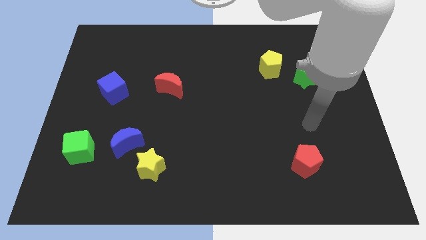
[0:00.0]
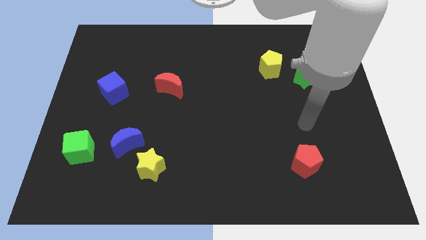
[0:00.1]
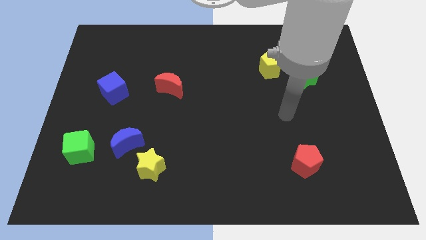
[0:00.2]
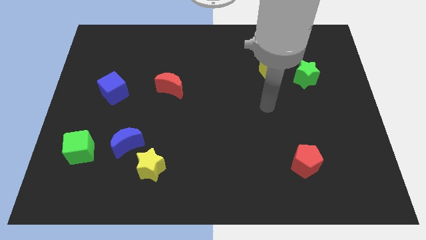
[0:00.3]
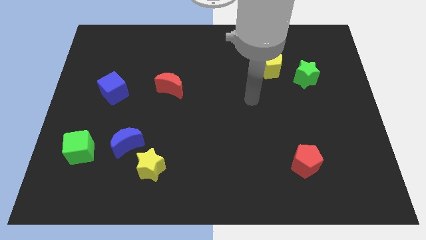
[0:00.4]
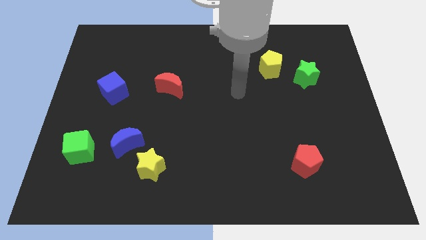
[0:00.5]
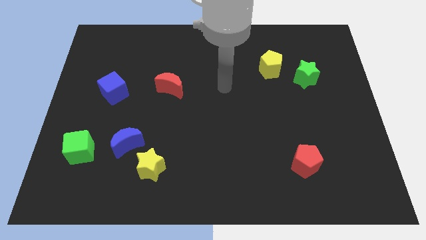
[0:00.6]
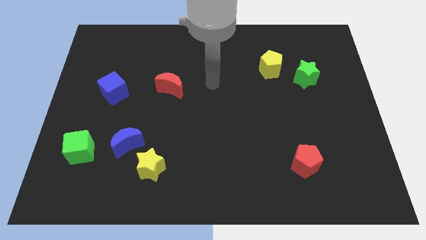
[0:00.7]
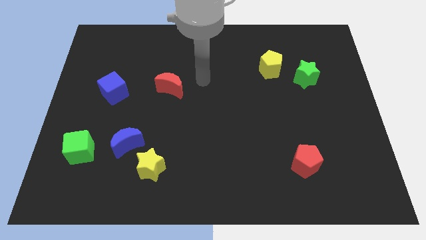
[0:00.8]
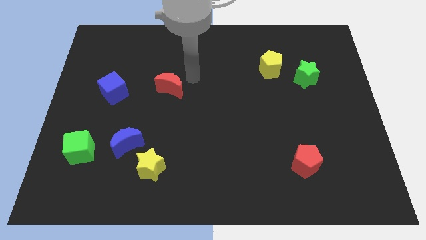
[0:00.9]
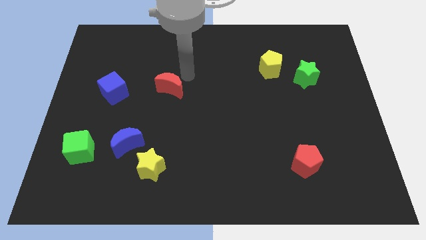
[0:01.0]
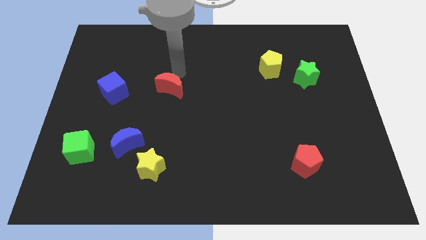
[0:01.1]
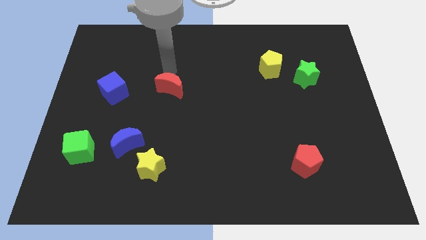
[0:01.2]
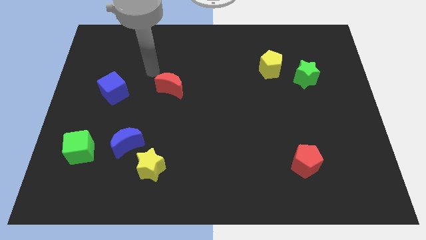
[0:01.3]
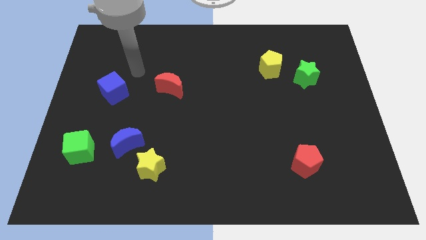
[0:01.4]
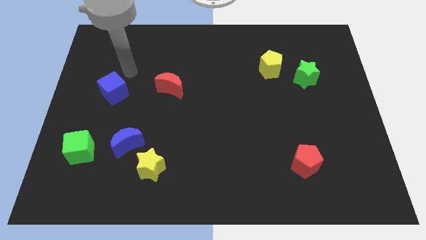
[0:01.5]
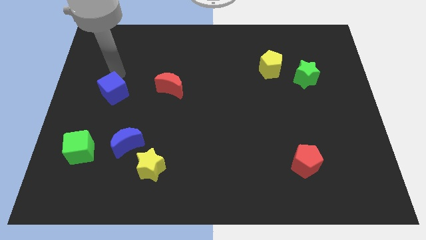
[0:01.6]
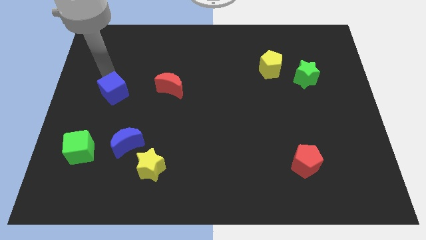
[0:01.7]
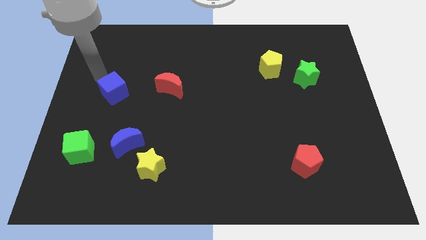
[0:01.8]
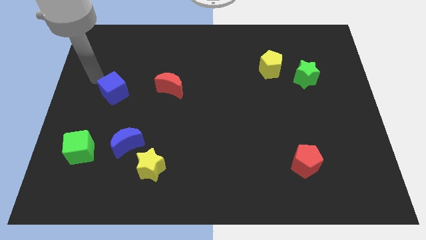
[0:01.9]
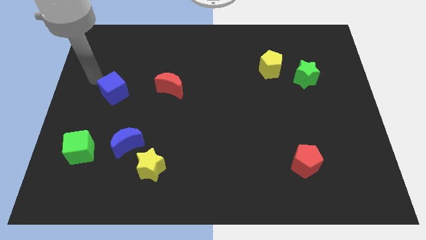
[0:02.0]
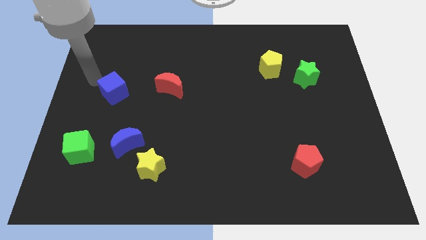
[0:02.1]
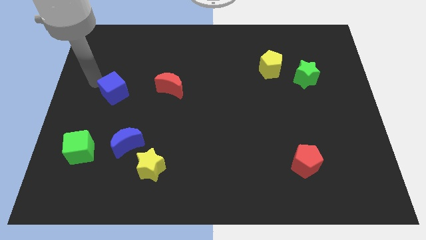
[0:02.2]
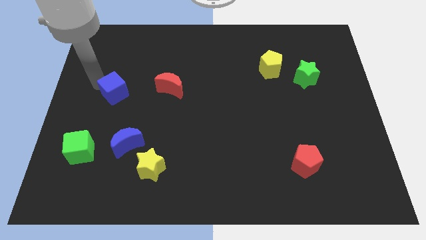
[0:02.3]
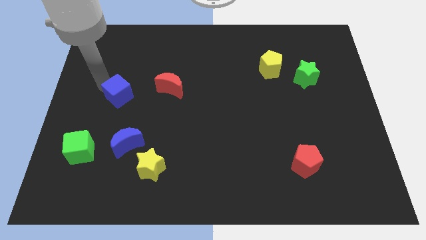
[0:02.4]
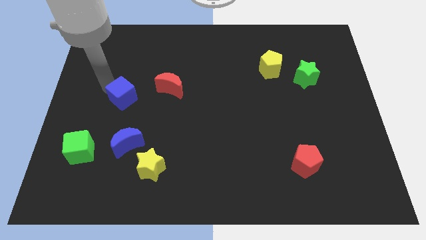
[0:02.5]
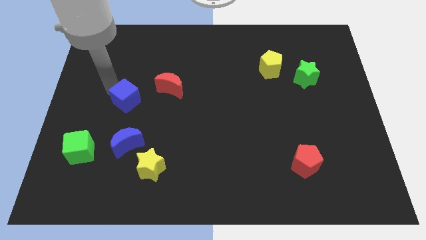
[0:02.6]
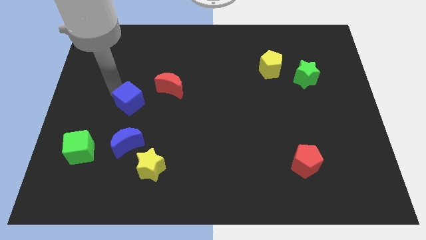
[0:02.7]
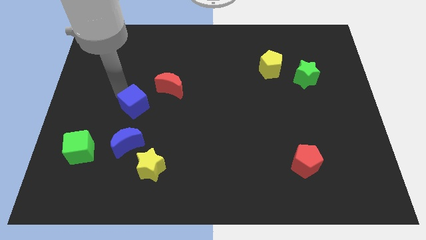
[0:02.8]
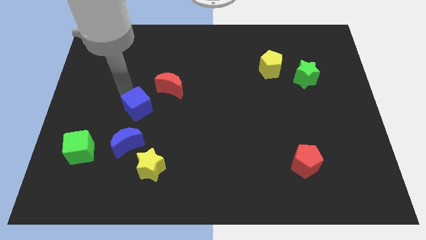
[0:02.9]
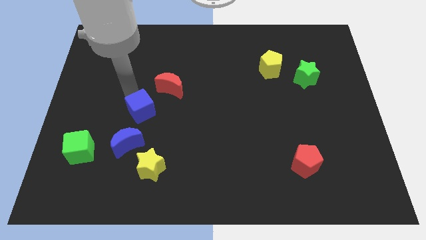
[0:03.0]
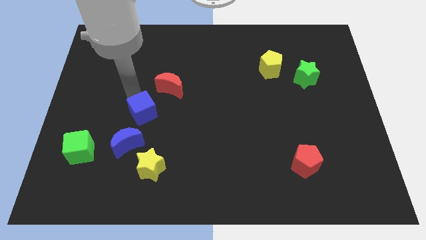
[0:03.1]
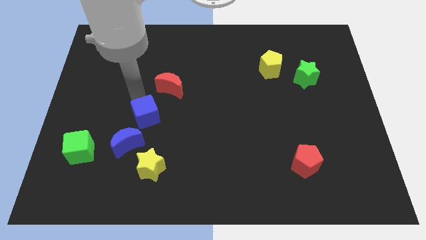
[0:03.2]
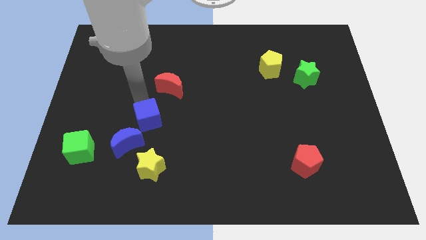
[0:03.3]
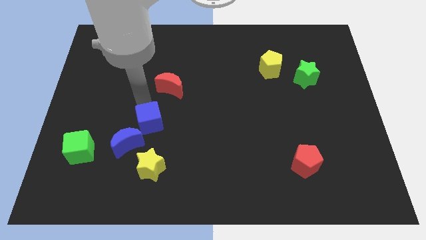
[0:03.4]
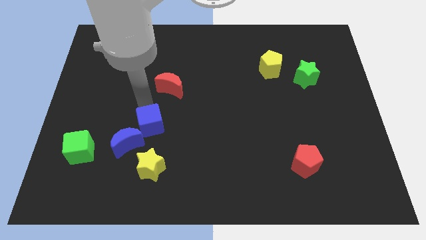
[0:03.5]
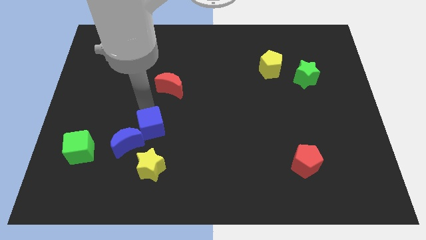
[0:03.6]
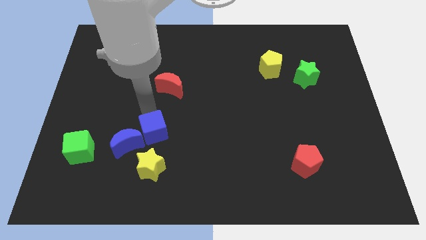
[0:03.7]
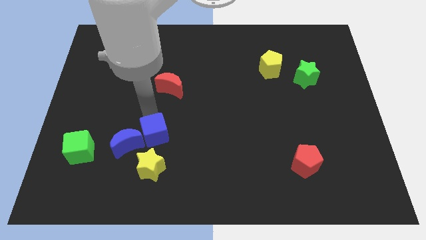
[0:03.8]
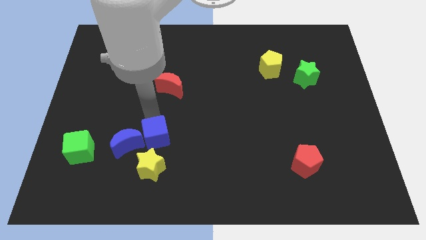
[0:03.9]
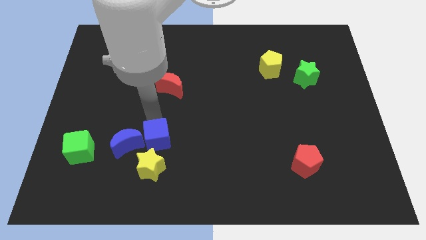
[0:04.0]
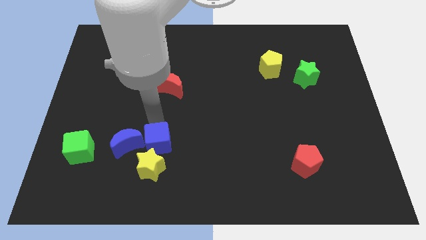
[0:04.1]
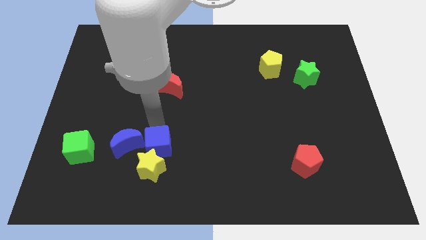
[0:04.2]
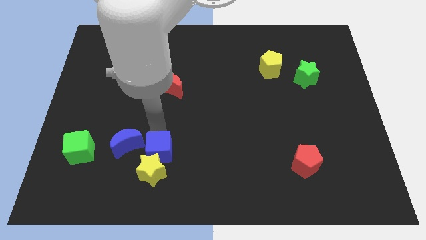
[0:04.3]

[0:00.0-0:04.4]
move the blue cube to the yellow star

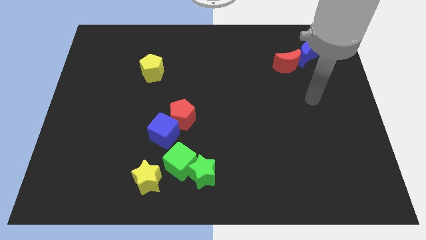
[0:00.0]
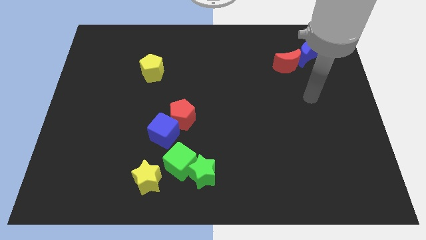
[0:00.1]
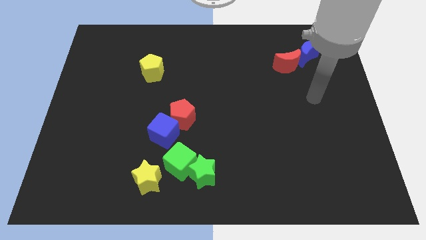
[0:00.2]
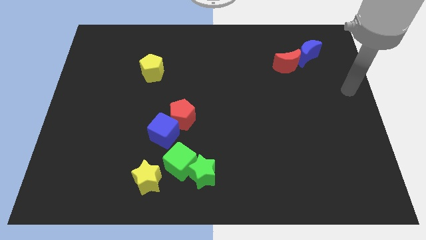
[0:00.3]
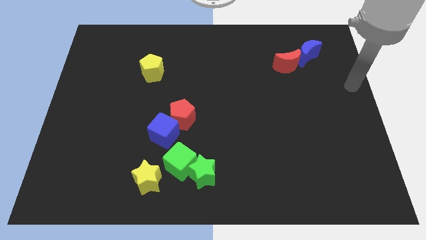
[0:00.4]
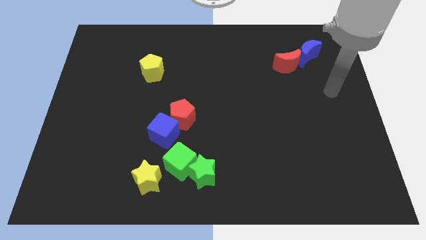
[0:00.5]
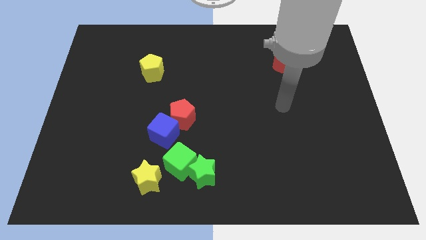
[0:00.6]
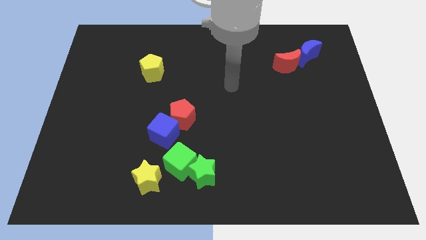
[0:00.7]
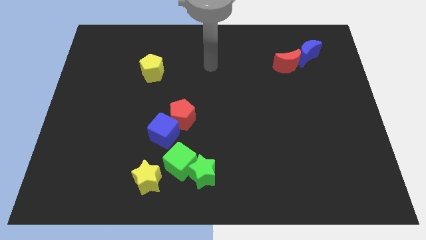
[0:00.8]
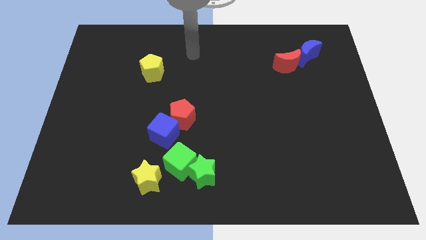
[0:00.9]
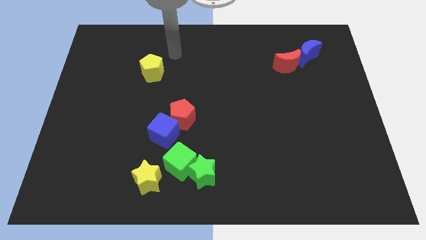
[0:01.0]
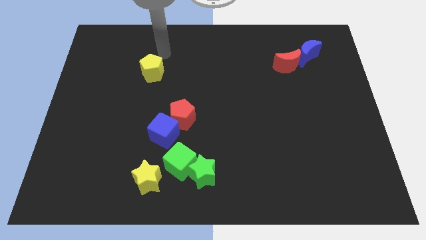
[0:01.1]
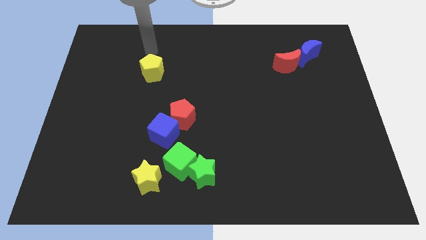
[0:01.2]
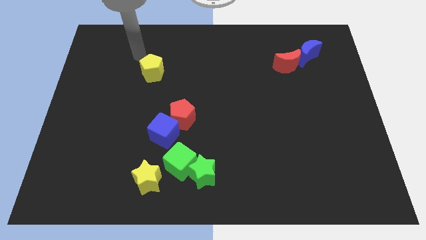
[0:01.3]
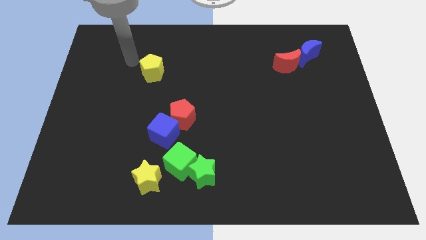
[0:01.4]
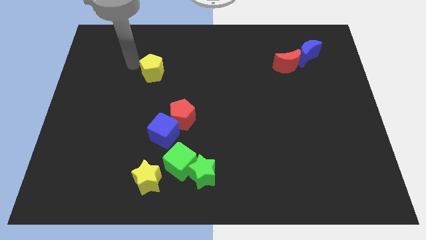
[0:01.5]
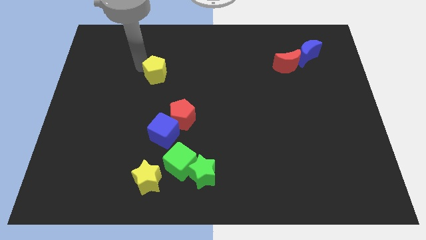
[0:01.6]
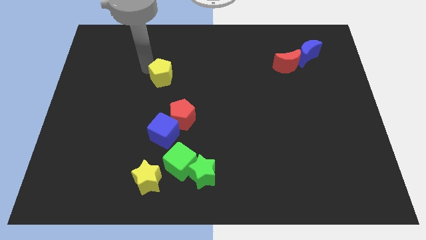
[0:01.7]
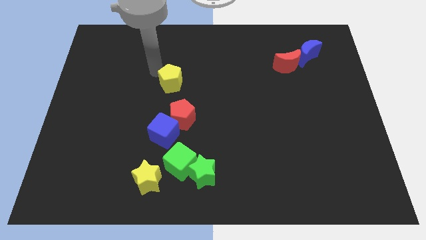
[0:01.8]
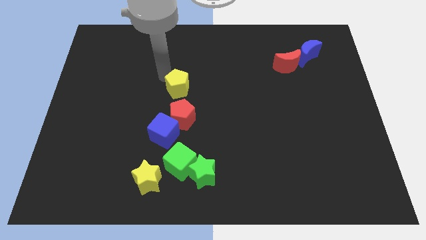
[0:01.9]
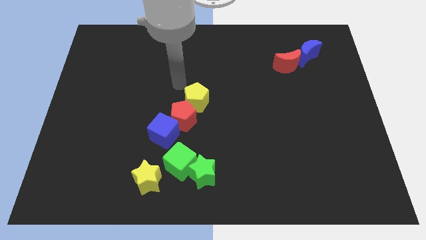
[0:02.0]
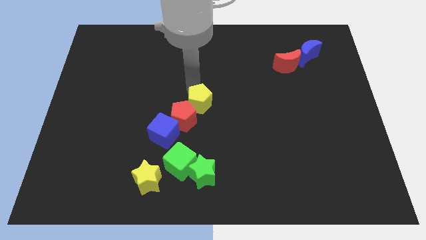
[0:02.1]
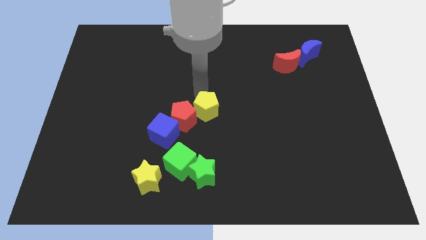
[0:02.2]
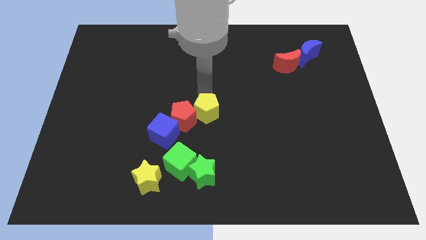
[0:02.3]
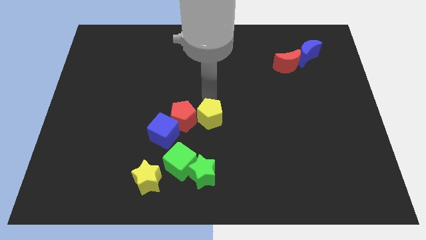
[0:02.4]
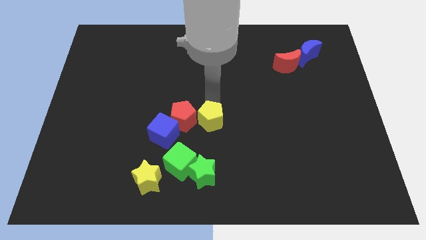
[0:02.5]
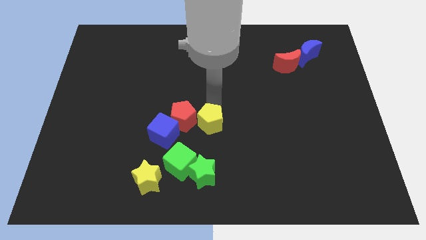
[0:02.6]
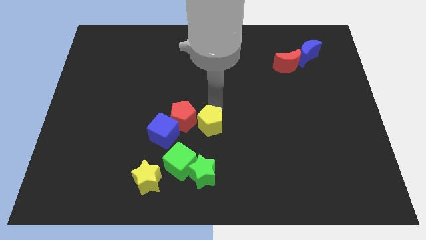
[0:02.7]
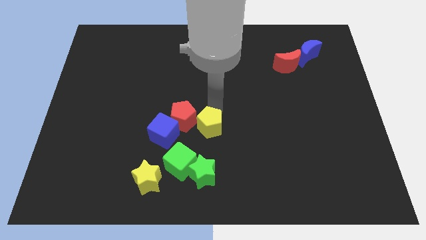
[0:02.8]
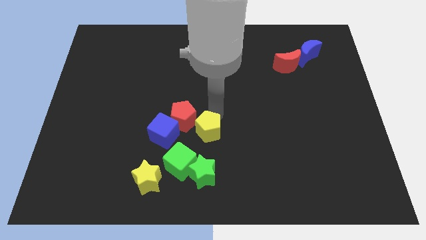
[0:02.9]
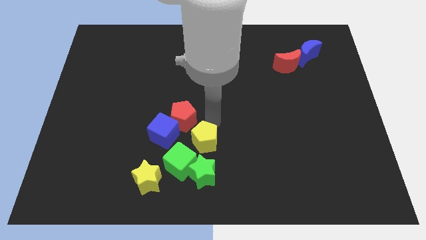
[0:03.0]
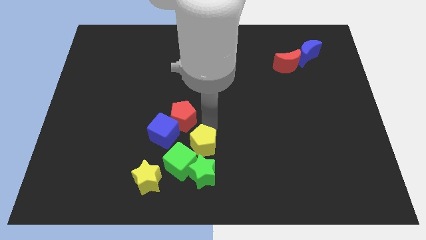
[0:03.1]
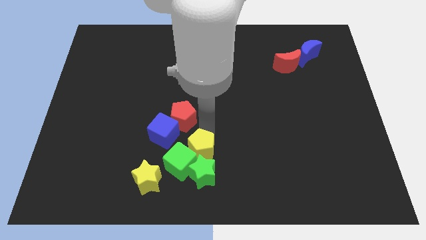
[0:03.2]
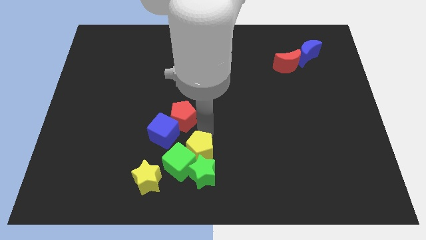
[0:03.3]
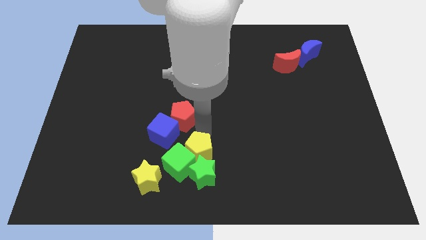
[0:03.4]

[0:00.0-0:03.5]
move the yellow pentagon close to the green cube

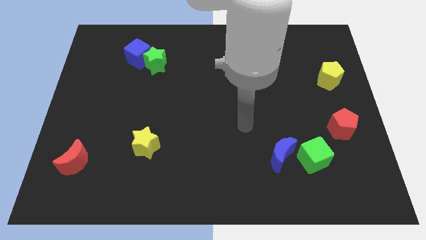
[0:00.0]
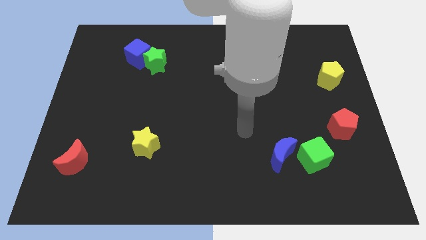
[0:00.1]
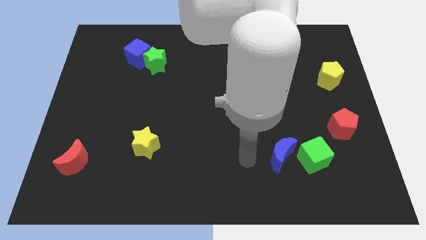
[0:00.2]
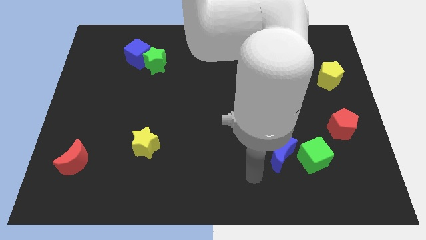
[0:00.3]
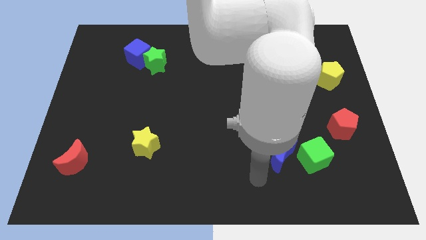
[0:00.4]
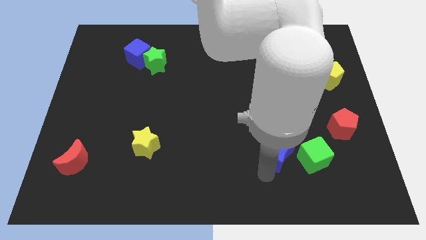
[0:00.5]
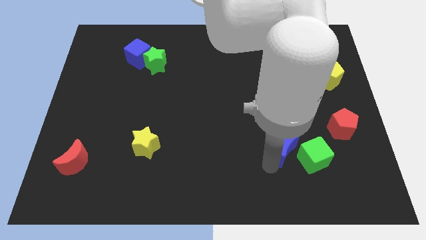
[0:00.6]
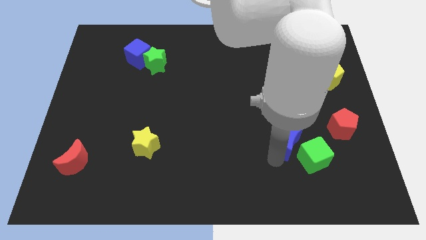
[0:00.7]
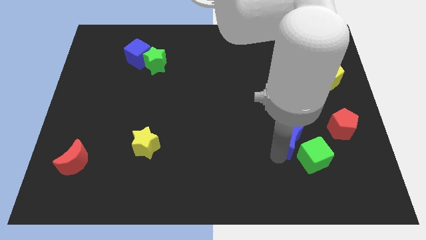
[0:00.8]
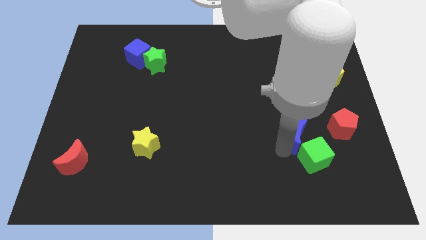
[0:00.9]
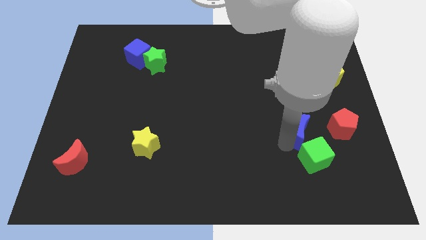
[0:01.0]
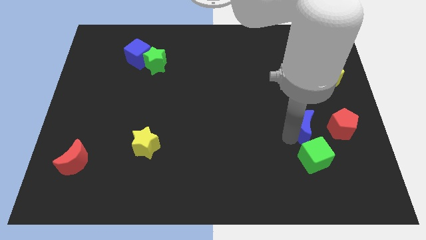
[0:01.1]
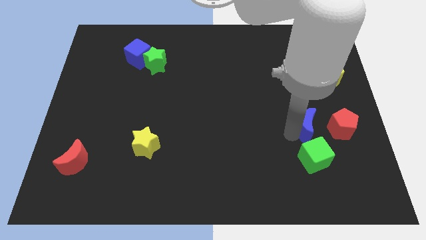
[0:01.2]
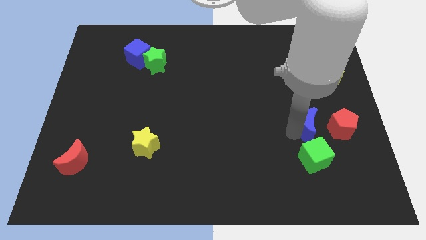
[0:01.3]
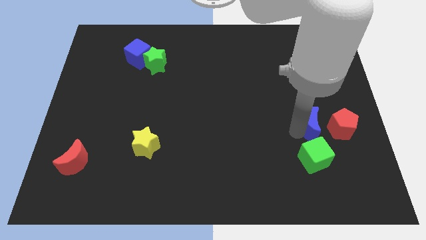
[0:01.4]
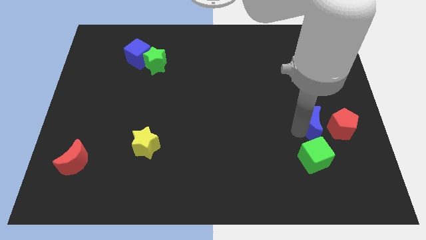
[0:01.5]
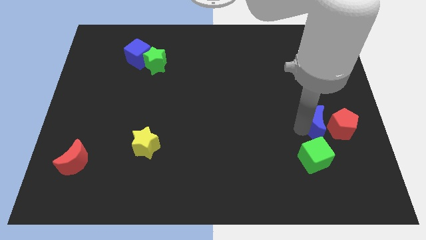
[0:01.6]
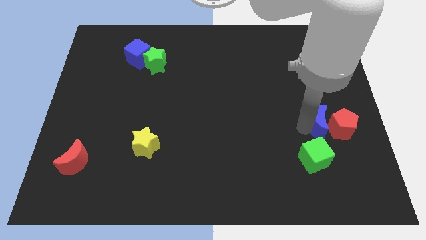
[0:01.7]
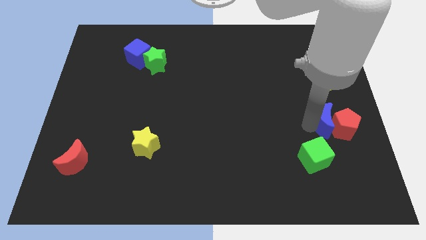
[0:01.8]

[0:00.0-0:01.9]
push the blue moon next to the red pentagon
